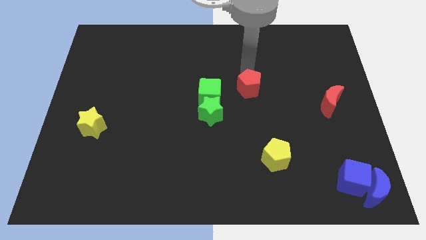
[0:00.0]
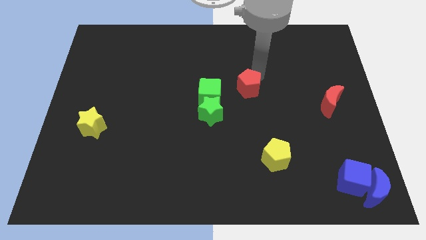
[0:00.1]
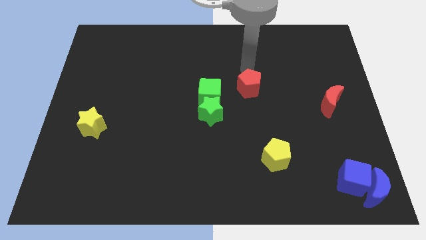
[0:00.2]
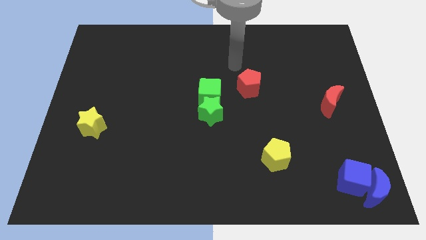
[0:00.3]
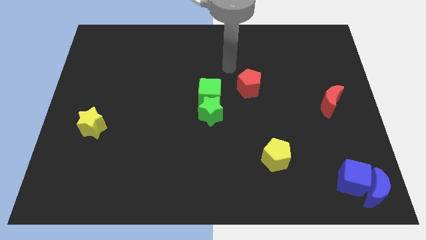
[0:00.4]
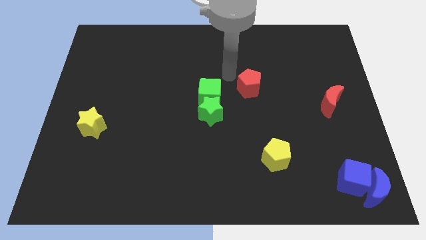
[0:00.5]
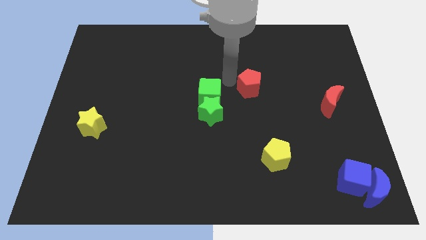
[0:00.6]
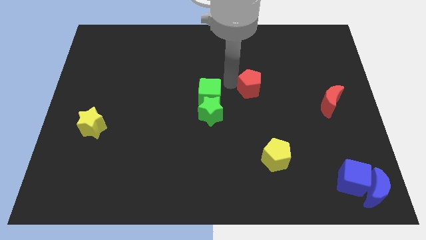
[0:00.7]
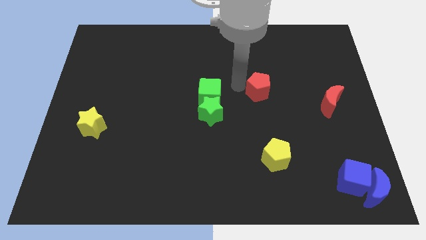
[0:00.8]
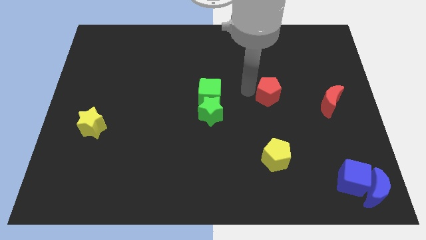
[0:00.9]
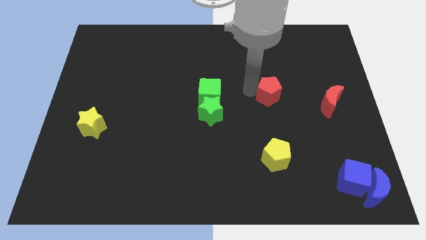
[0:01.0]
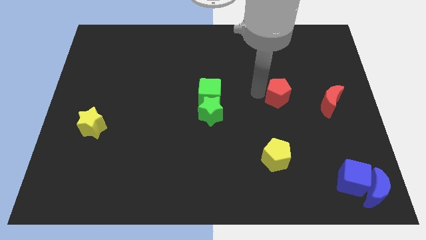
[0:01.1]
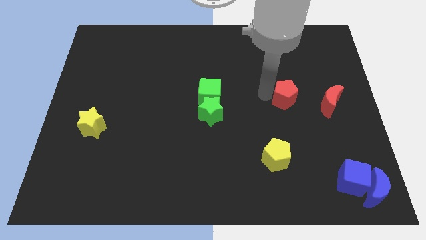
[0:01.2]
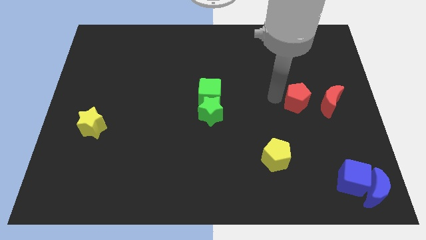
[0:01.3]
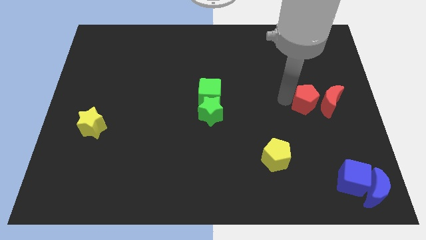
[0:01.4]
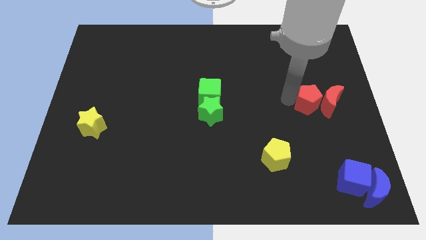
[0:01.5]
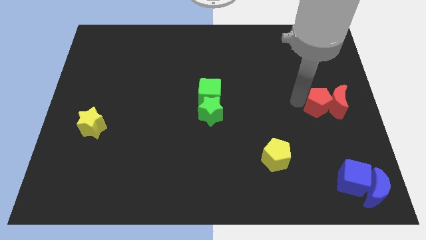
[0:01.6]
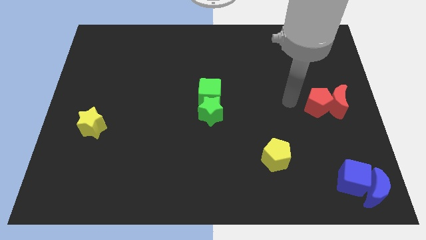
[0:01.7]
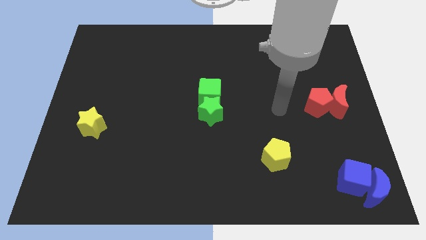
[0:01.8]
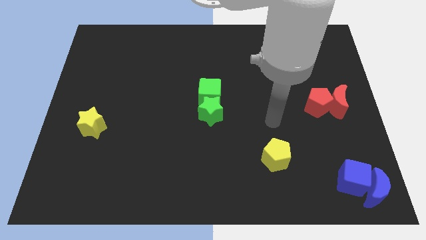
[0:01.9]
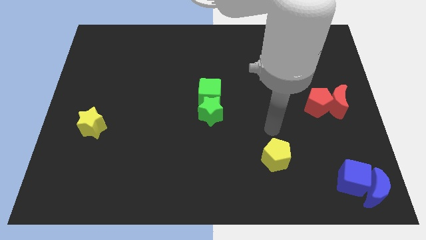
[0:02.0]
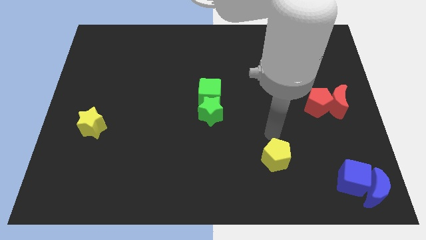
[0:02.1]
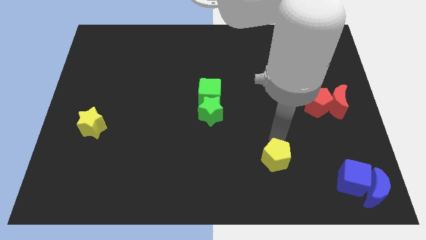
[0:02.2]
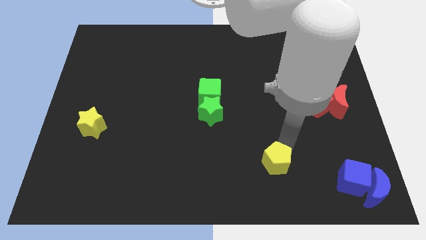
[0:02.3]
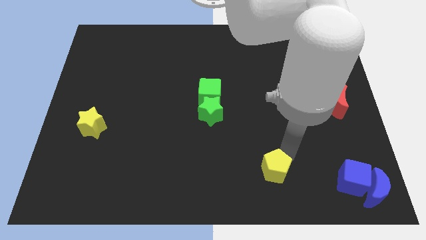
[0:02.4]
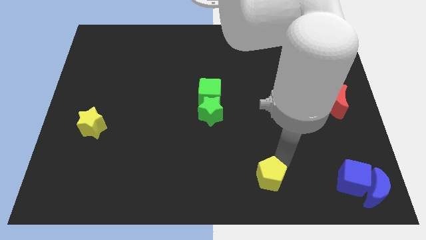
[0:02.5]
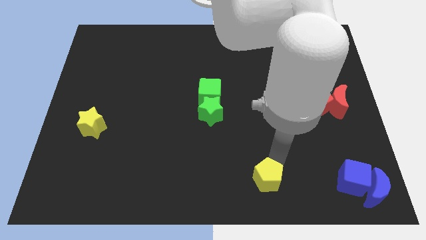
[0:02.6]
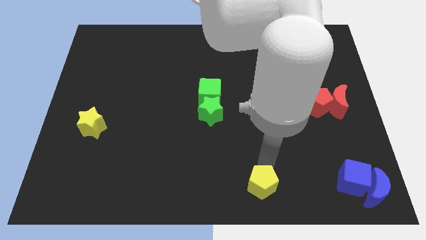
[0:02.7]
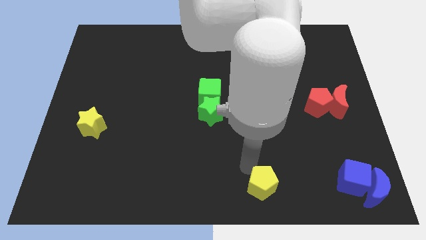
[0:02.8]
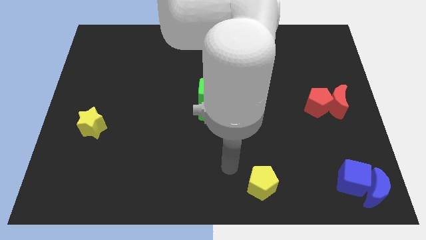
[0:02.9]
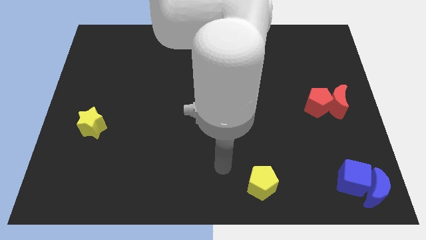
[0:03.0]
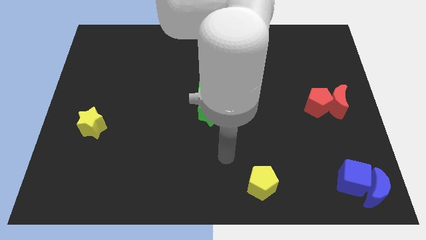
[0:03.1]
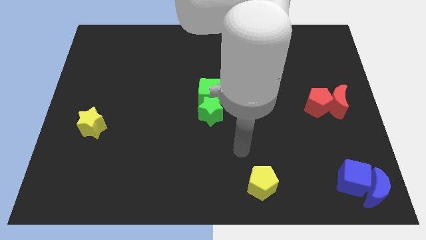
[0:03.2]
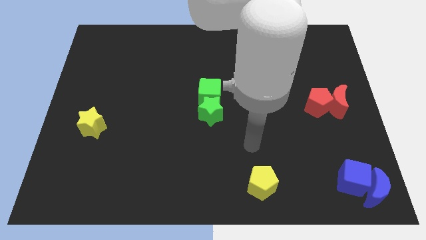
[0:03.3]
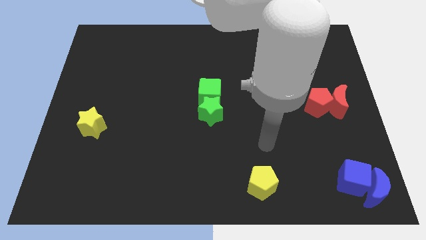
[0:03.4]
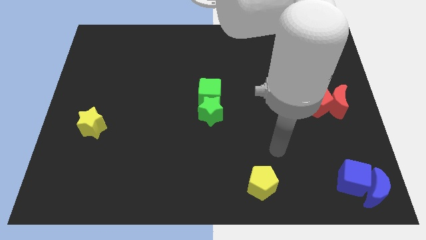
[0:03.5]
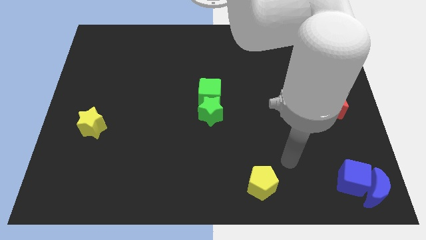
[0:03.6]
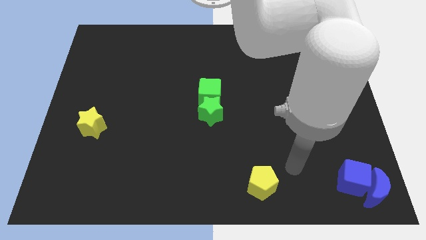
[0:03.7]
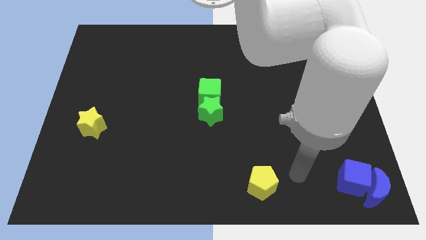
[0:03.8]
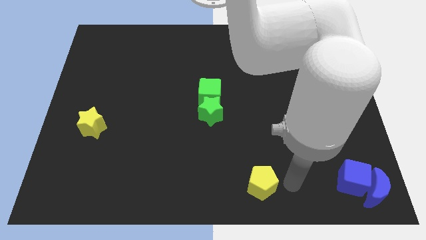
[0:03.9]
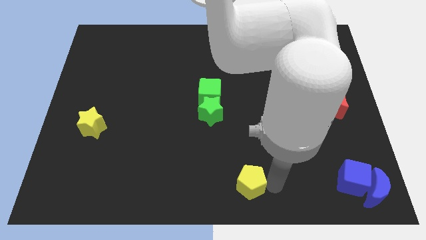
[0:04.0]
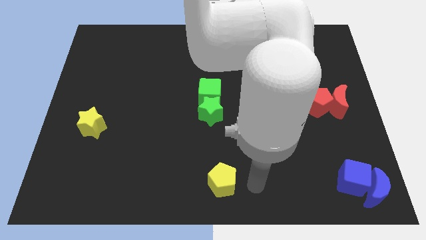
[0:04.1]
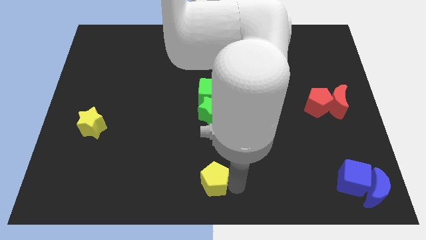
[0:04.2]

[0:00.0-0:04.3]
push the red pentagon towards the red crescent

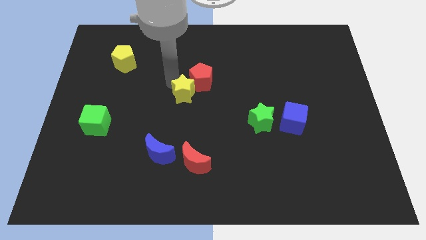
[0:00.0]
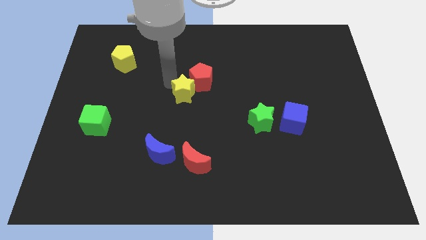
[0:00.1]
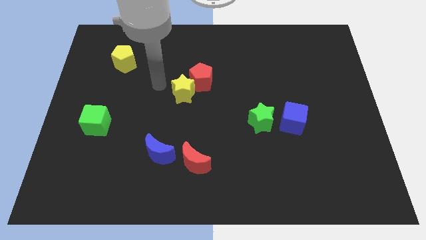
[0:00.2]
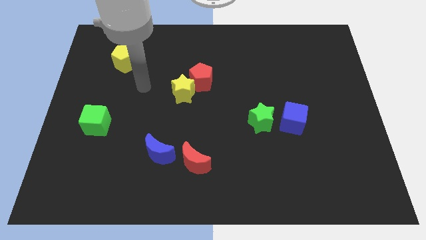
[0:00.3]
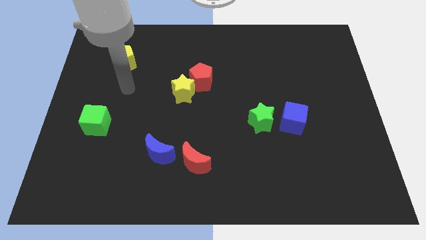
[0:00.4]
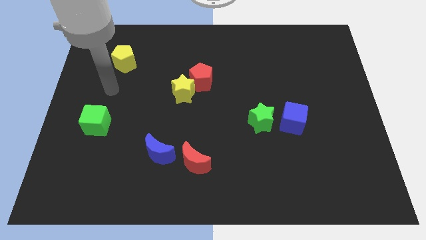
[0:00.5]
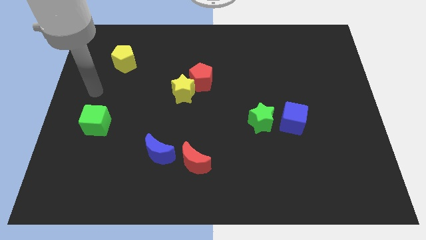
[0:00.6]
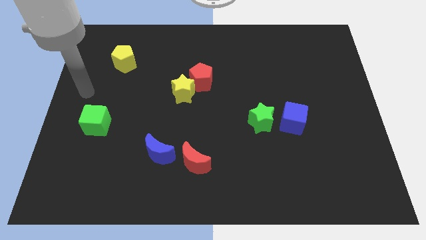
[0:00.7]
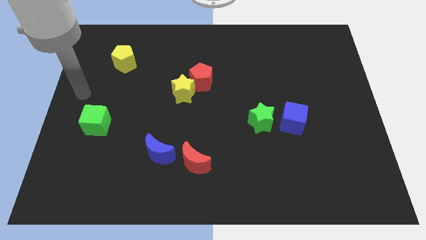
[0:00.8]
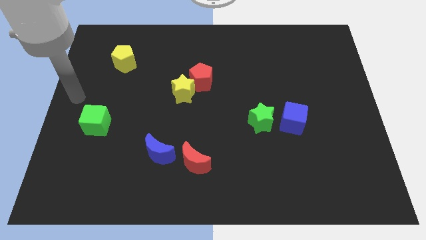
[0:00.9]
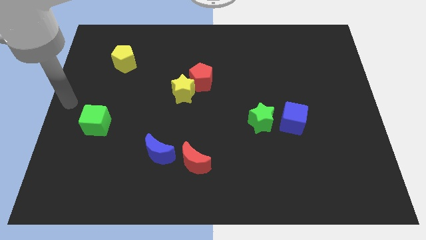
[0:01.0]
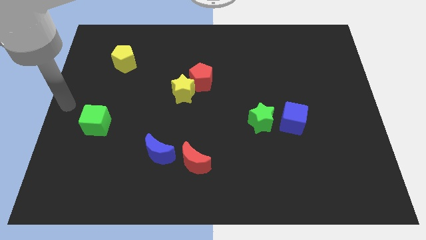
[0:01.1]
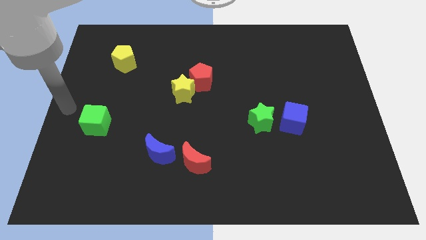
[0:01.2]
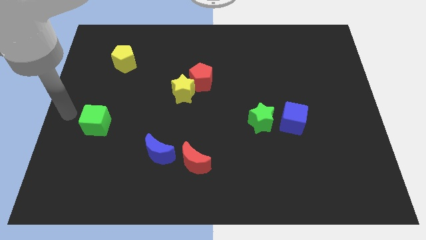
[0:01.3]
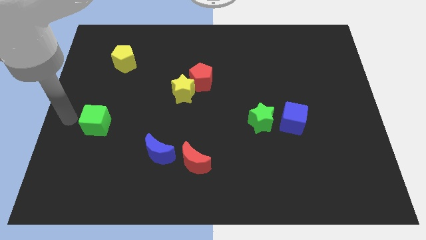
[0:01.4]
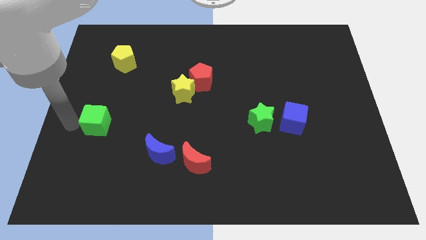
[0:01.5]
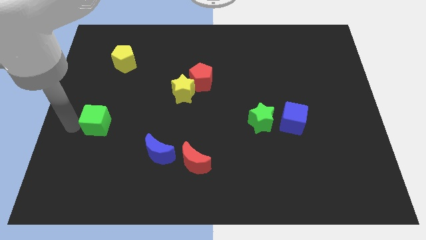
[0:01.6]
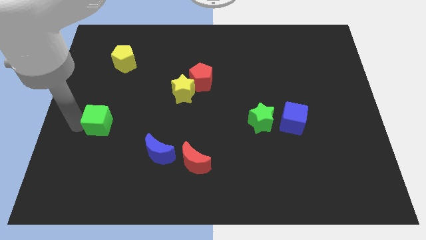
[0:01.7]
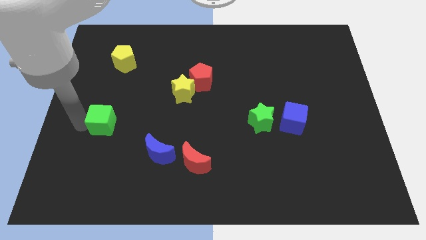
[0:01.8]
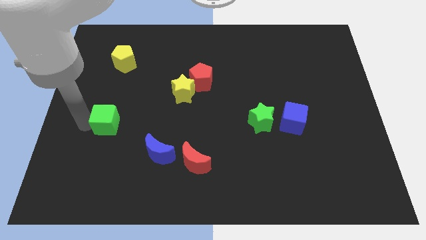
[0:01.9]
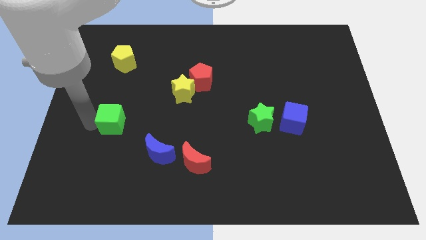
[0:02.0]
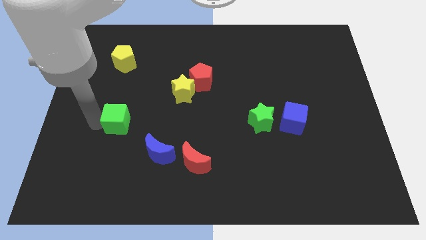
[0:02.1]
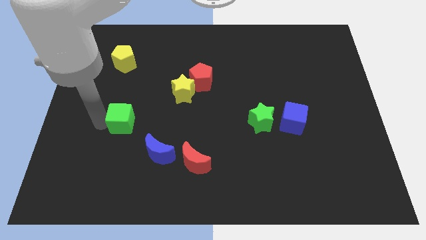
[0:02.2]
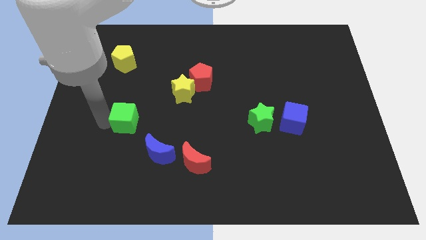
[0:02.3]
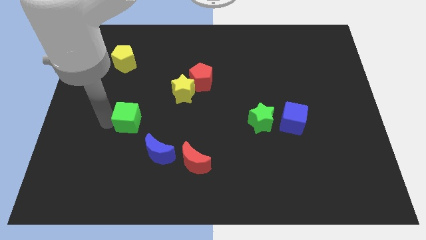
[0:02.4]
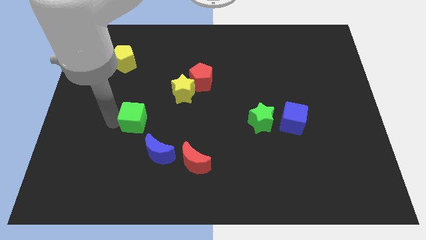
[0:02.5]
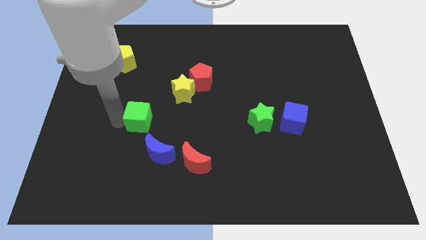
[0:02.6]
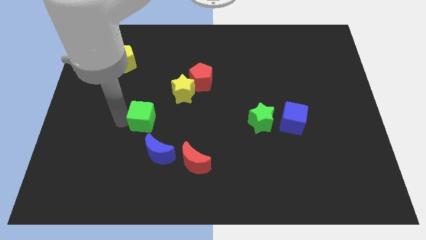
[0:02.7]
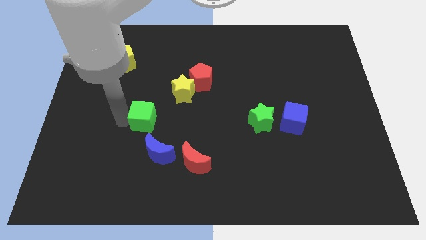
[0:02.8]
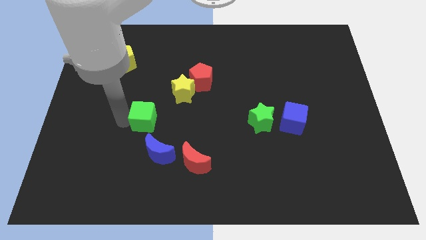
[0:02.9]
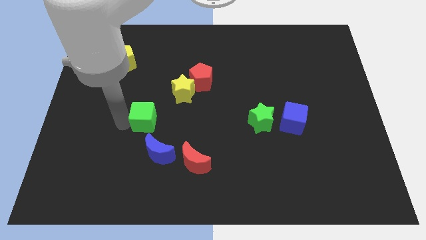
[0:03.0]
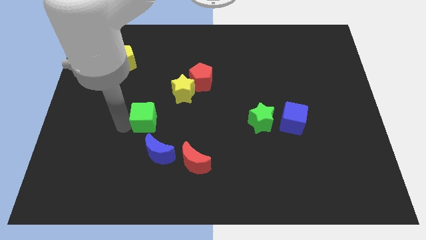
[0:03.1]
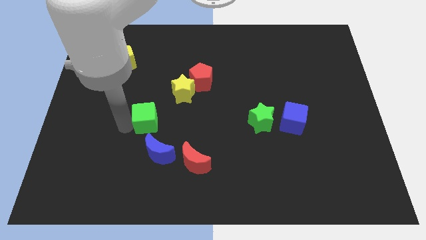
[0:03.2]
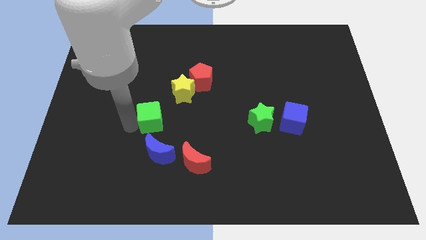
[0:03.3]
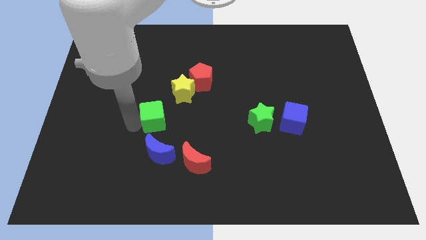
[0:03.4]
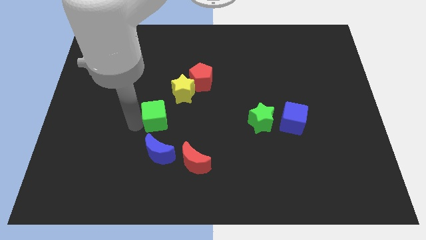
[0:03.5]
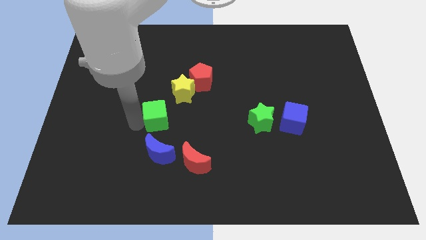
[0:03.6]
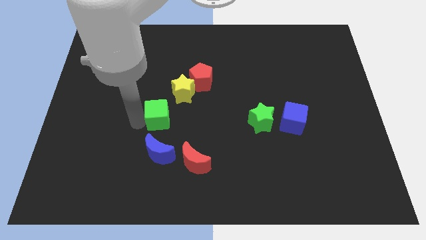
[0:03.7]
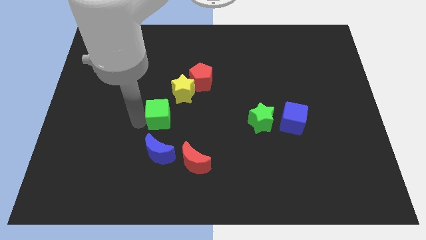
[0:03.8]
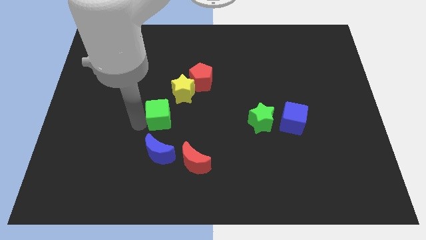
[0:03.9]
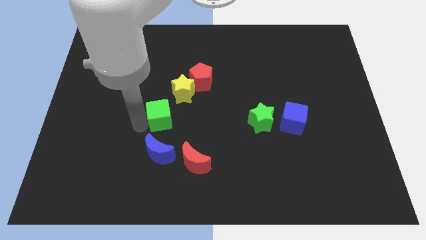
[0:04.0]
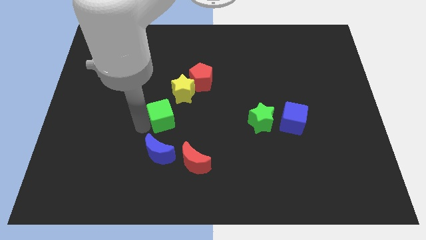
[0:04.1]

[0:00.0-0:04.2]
push the green cube towards the center of the board

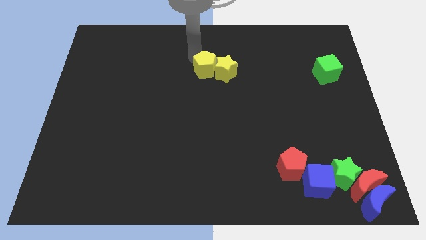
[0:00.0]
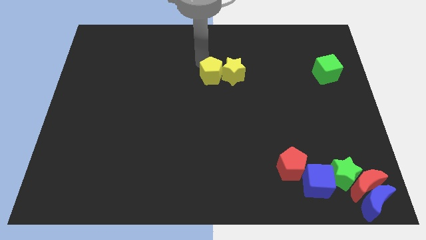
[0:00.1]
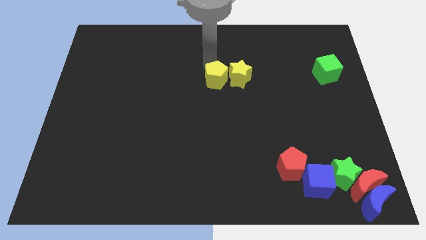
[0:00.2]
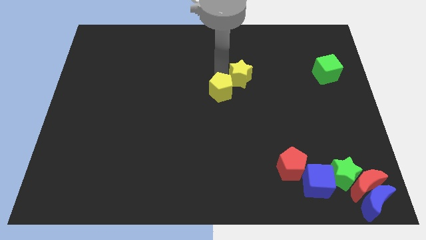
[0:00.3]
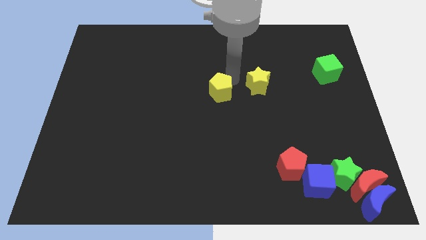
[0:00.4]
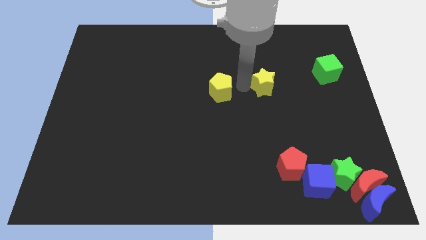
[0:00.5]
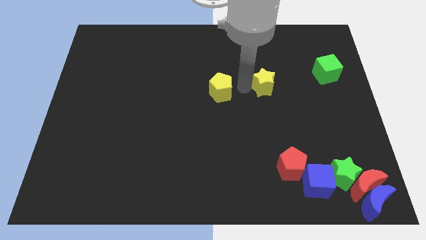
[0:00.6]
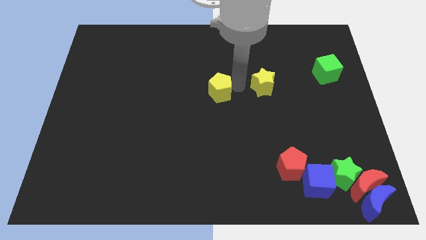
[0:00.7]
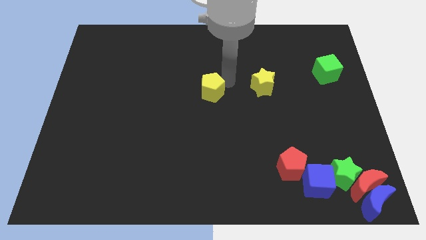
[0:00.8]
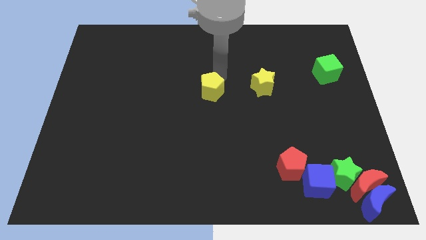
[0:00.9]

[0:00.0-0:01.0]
separate the yellow pentagon and the yellow star
